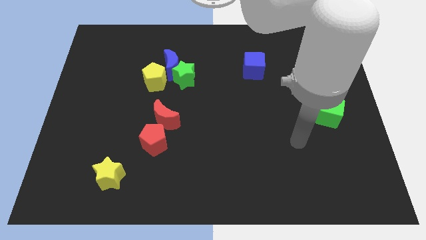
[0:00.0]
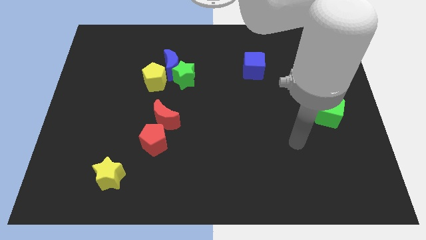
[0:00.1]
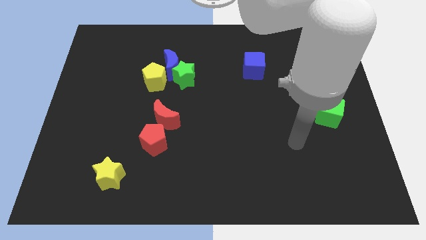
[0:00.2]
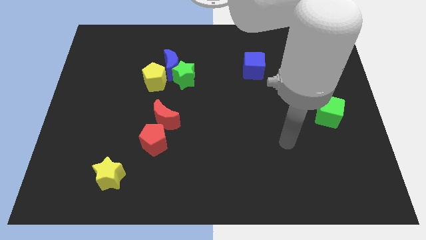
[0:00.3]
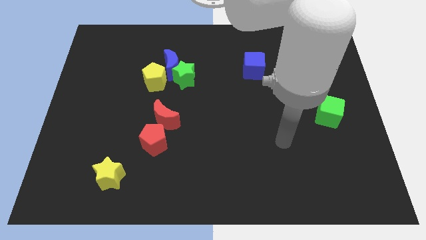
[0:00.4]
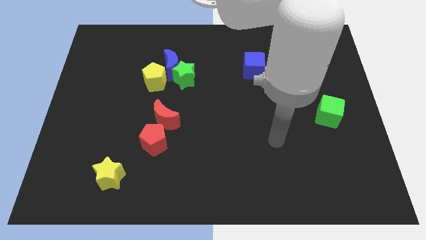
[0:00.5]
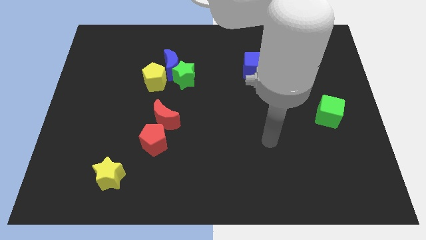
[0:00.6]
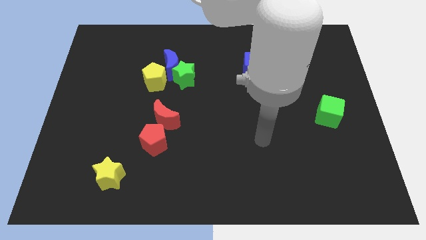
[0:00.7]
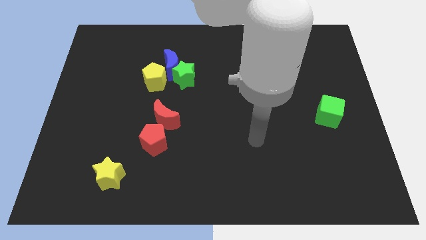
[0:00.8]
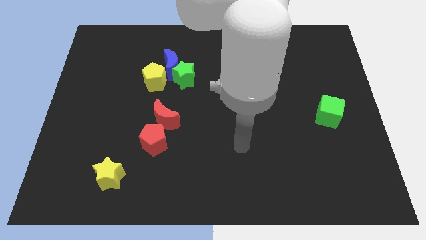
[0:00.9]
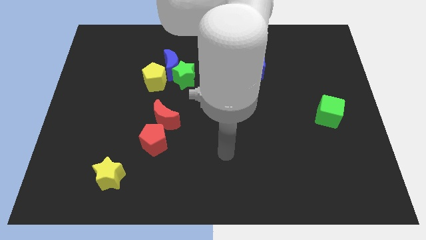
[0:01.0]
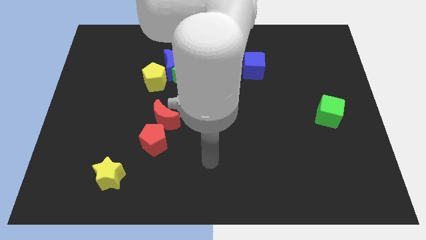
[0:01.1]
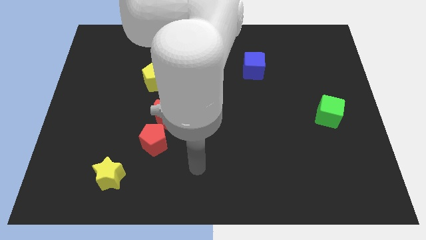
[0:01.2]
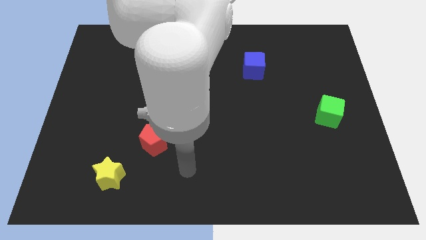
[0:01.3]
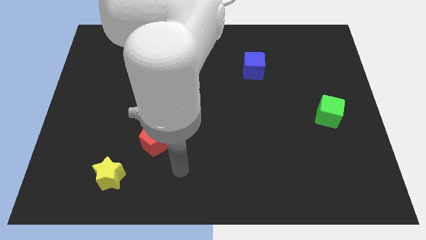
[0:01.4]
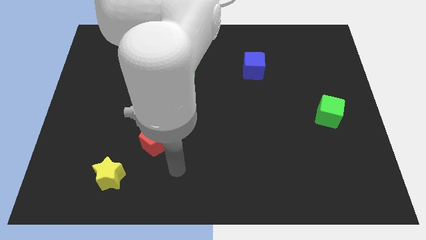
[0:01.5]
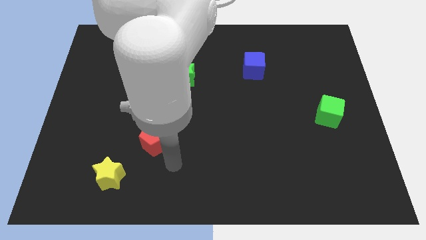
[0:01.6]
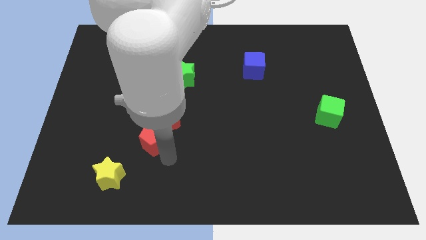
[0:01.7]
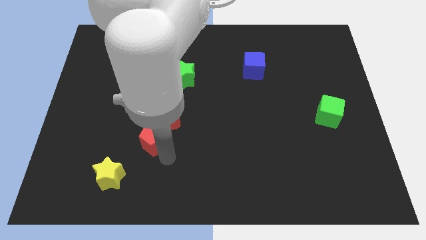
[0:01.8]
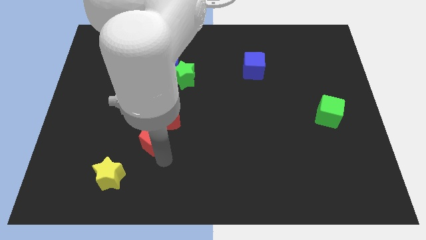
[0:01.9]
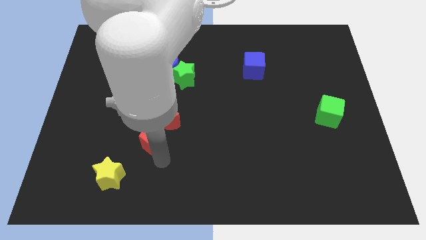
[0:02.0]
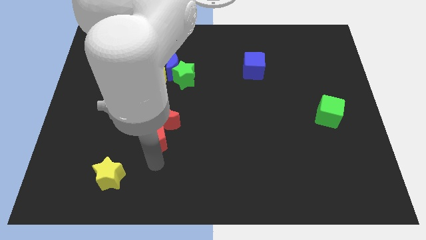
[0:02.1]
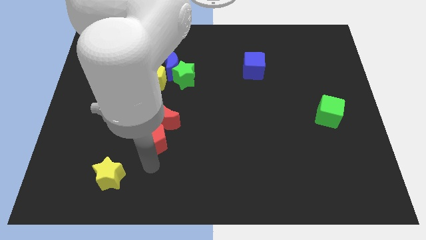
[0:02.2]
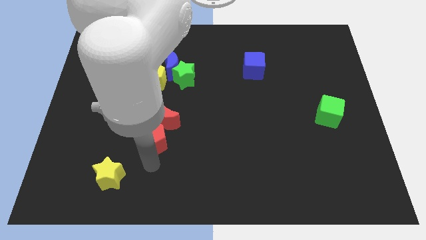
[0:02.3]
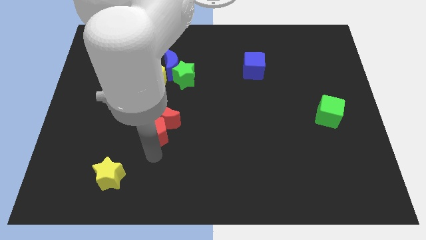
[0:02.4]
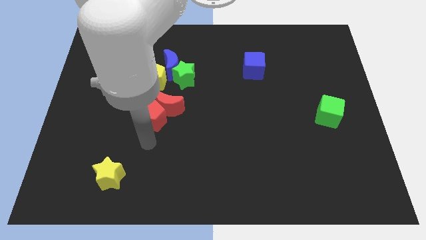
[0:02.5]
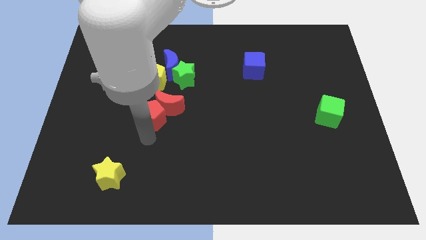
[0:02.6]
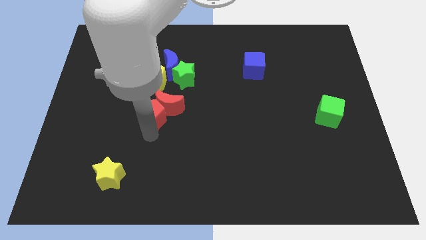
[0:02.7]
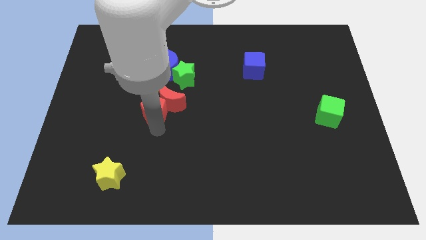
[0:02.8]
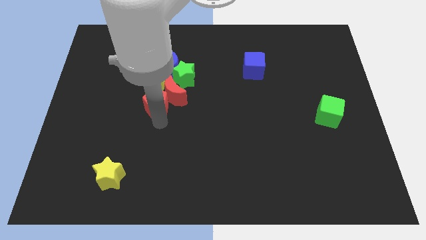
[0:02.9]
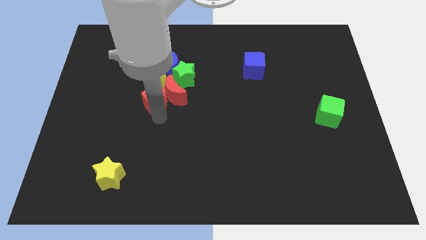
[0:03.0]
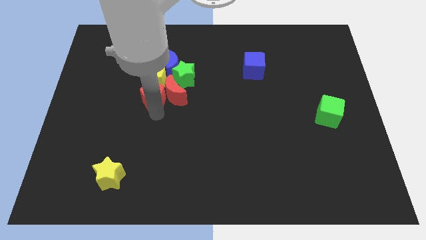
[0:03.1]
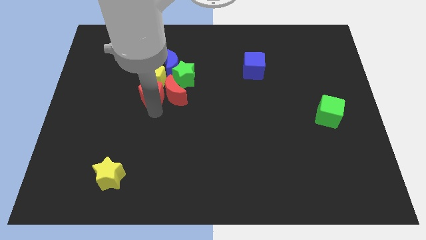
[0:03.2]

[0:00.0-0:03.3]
push the red blocks into the group of blocks

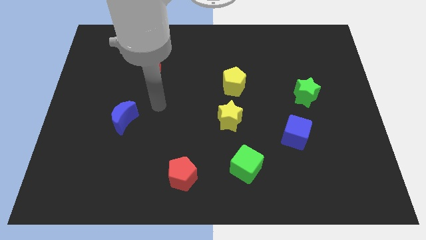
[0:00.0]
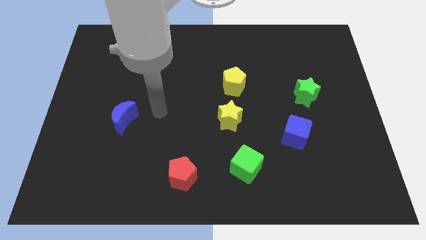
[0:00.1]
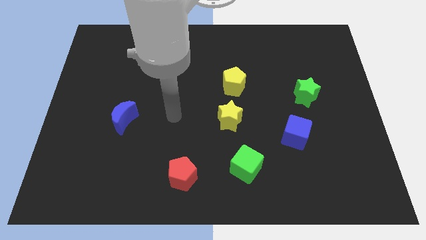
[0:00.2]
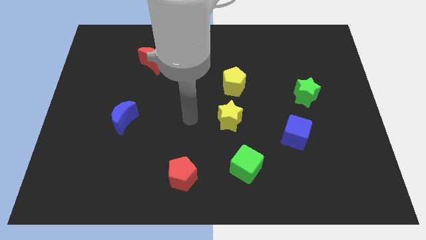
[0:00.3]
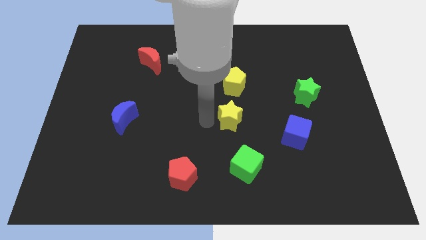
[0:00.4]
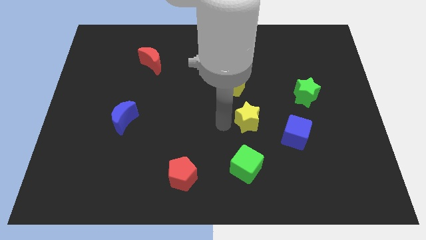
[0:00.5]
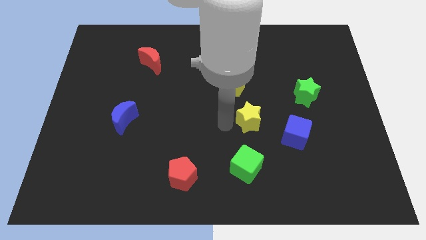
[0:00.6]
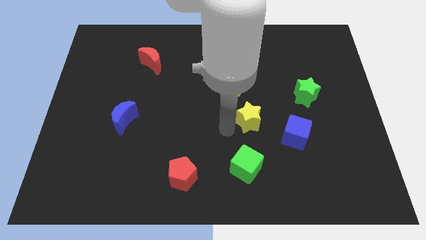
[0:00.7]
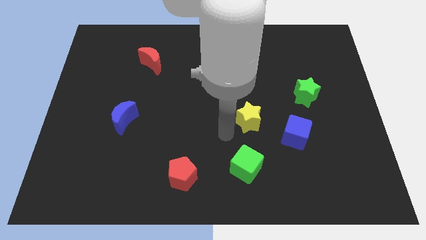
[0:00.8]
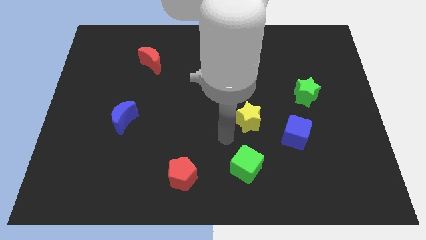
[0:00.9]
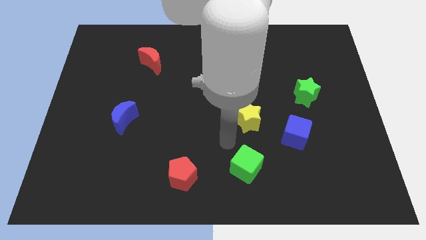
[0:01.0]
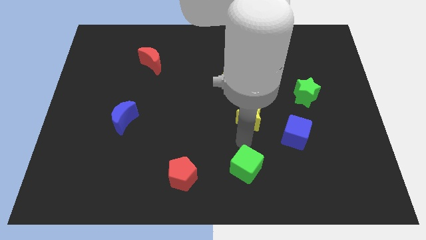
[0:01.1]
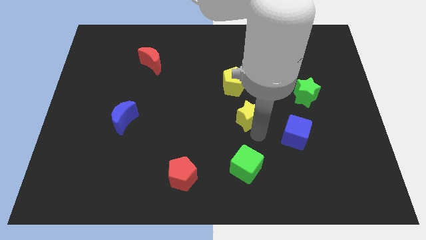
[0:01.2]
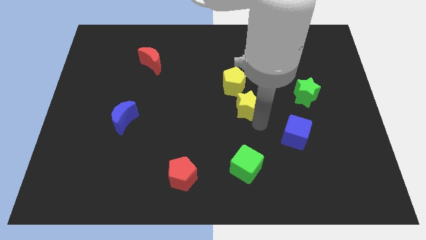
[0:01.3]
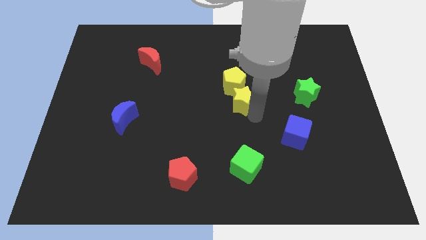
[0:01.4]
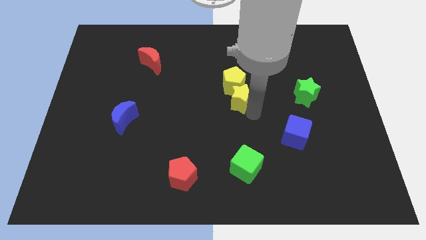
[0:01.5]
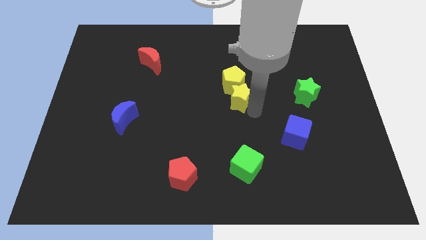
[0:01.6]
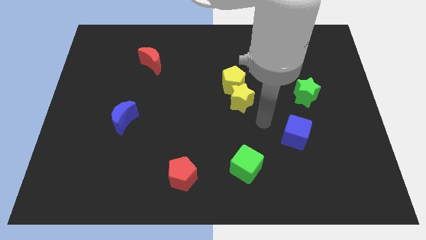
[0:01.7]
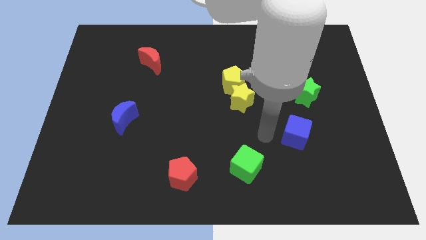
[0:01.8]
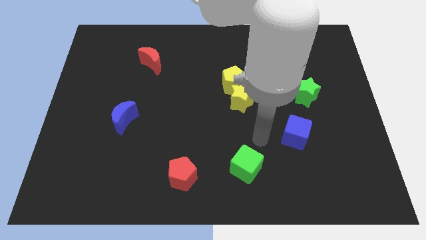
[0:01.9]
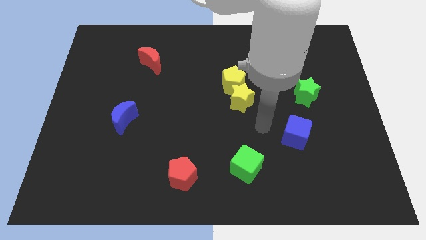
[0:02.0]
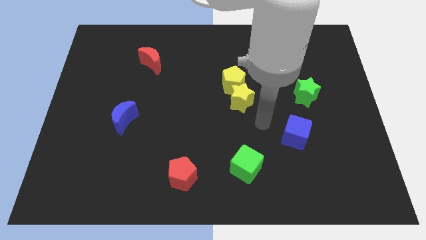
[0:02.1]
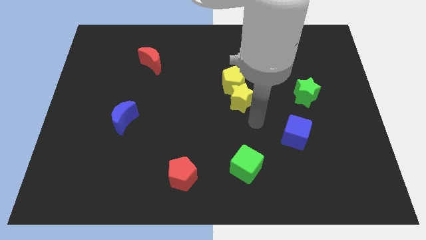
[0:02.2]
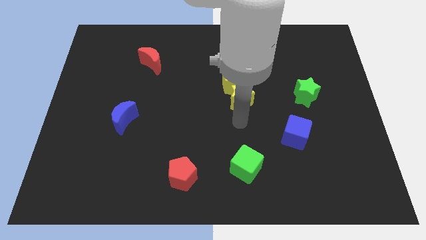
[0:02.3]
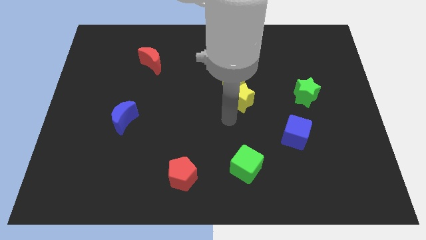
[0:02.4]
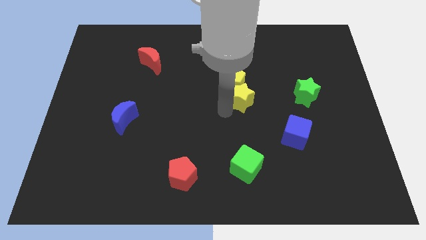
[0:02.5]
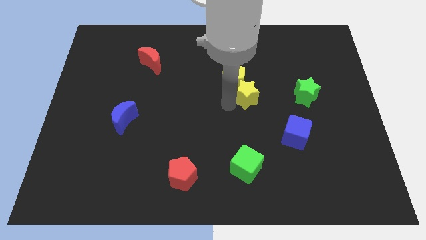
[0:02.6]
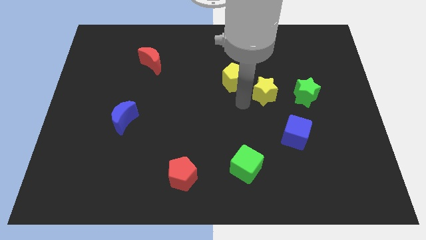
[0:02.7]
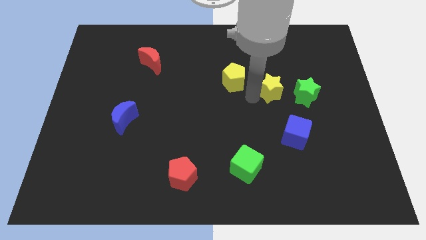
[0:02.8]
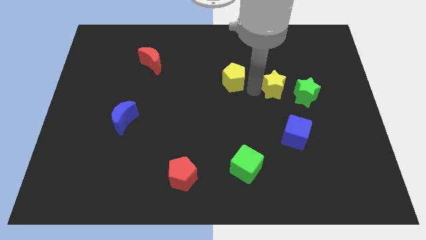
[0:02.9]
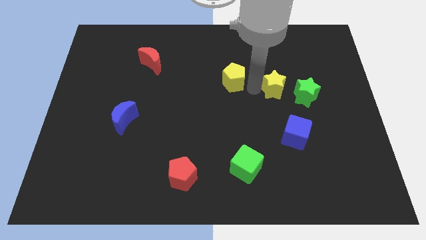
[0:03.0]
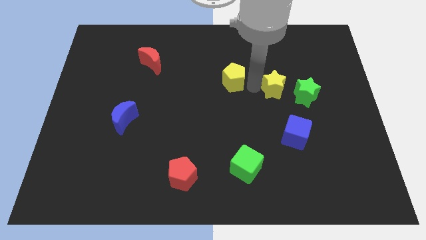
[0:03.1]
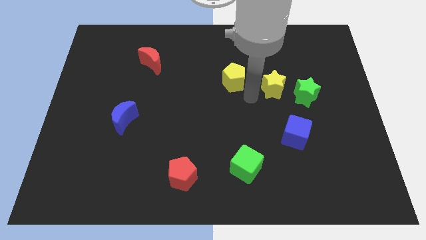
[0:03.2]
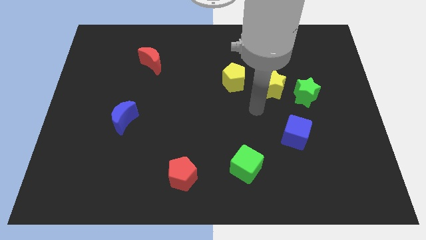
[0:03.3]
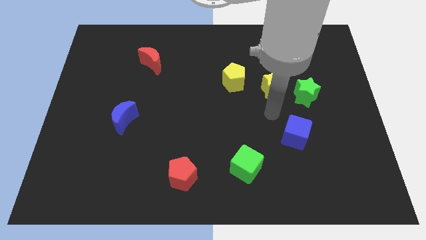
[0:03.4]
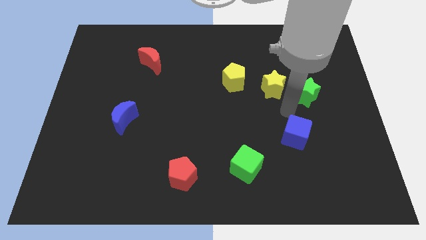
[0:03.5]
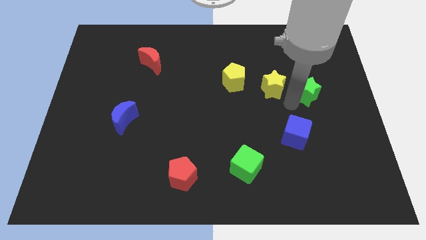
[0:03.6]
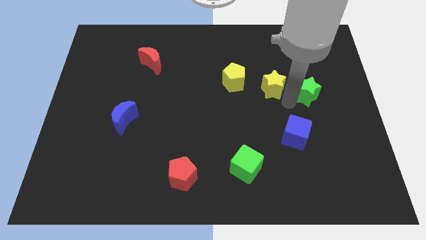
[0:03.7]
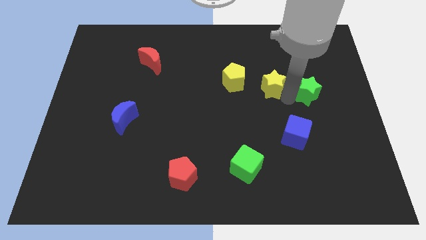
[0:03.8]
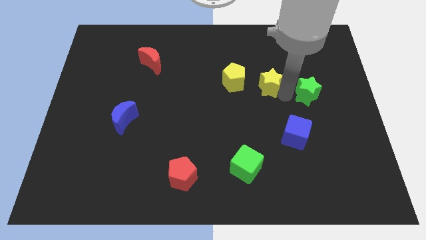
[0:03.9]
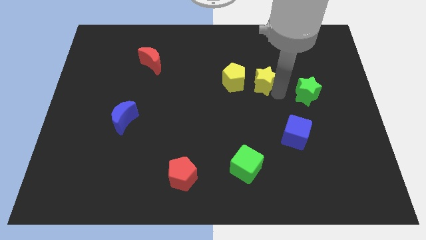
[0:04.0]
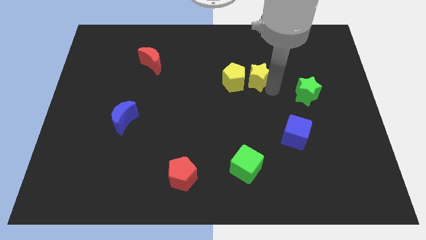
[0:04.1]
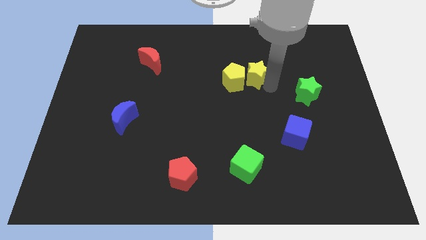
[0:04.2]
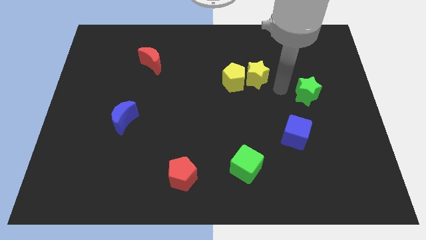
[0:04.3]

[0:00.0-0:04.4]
move the yellow star into the right side of the yellow pentagon

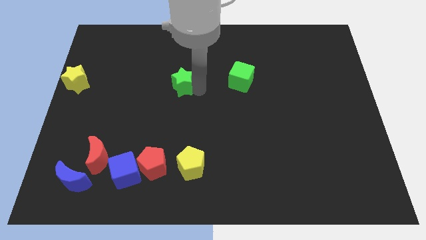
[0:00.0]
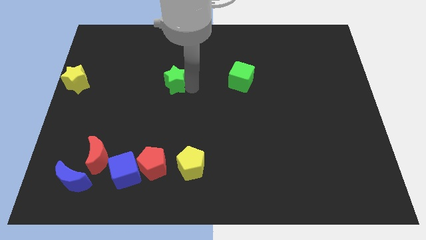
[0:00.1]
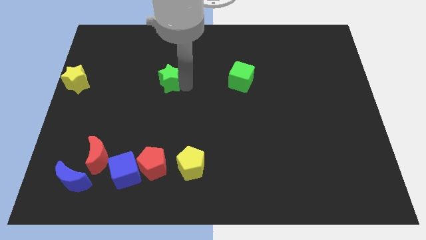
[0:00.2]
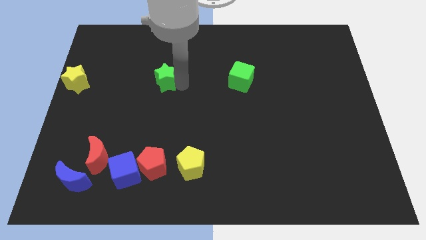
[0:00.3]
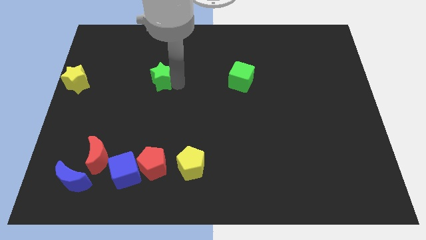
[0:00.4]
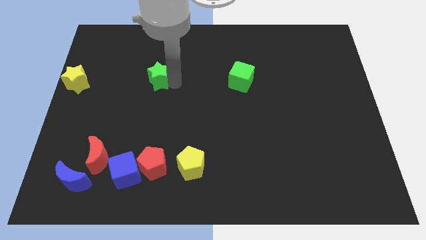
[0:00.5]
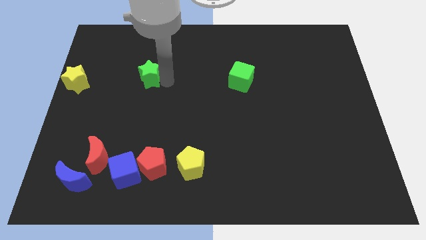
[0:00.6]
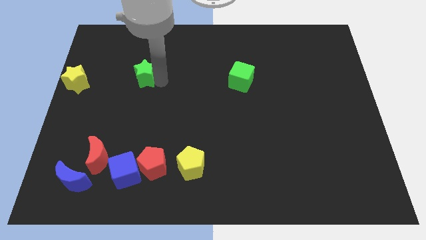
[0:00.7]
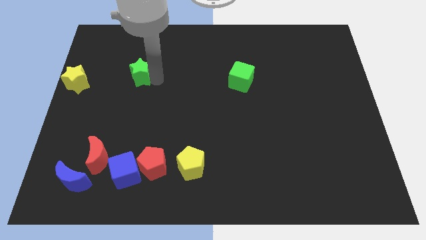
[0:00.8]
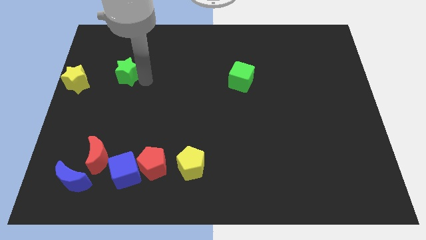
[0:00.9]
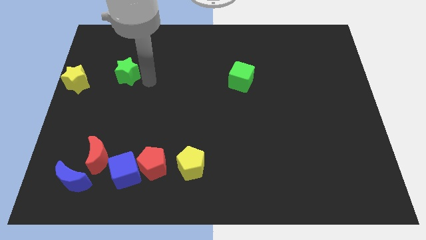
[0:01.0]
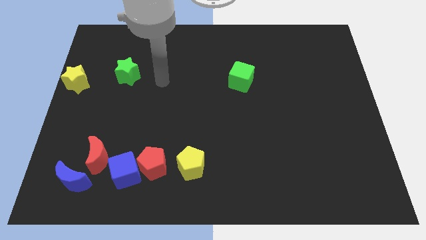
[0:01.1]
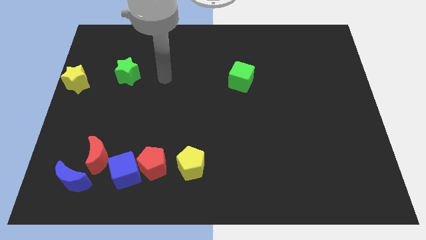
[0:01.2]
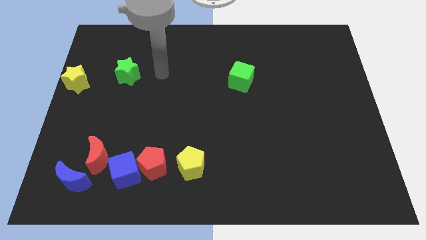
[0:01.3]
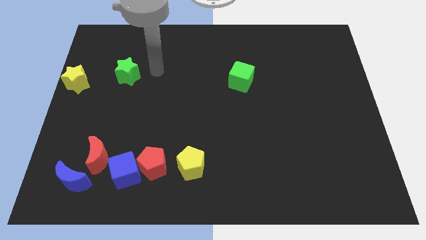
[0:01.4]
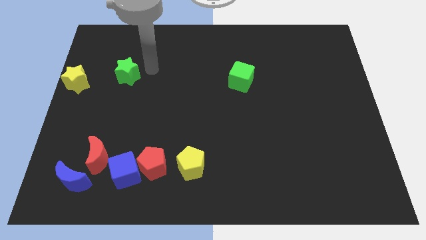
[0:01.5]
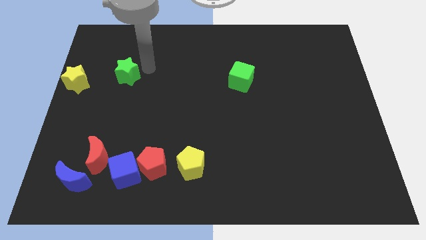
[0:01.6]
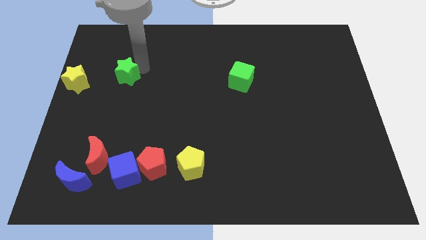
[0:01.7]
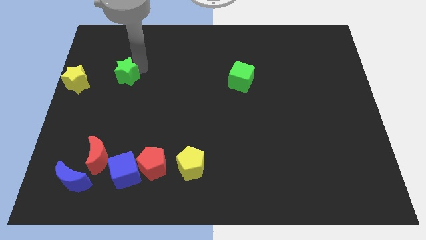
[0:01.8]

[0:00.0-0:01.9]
place the green star at the right side of the yellow star
